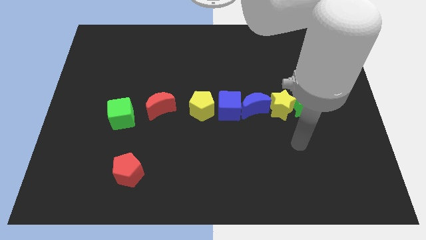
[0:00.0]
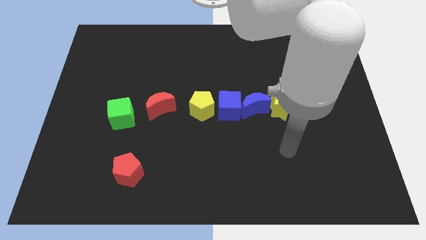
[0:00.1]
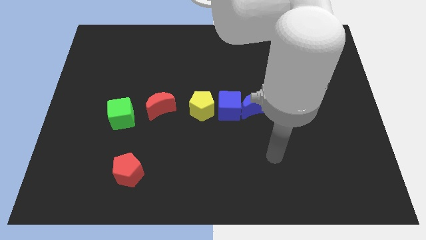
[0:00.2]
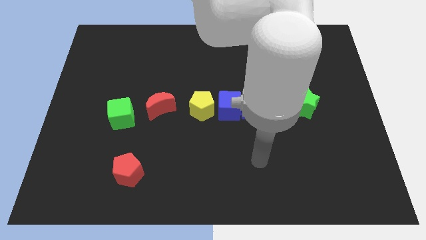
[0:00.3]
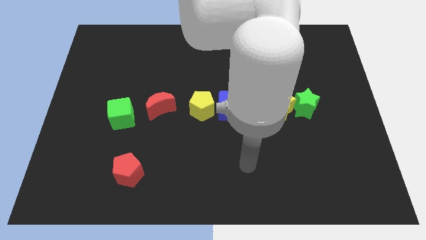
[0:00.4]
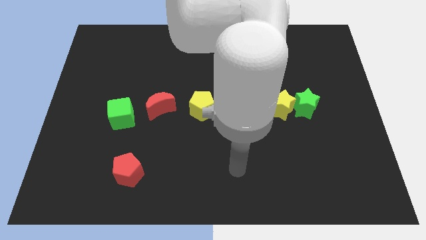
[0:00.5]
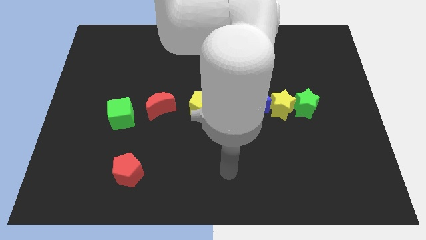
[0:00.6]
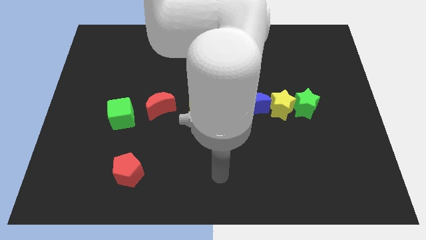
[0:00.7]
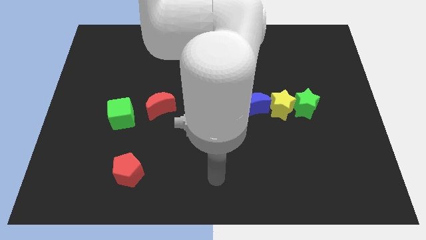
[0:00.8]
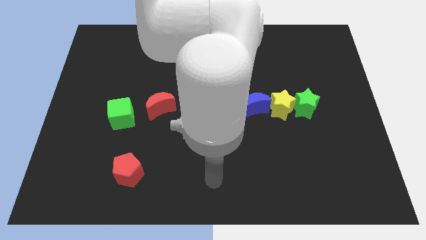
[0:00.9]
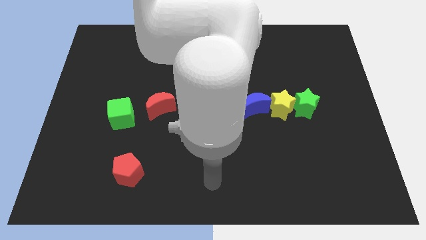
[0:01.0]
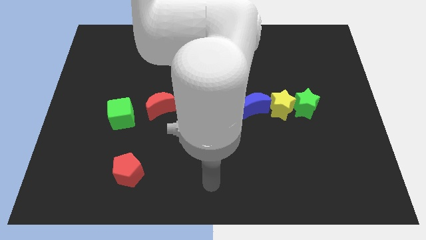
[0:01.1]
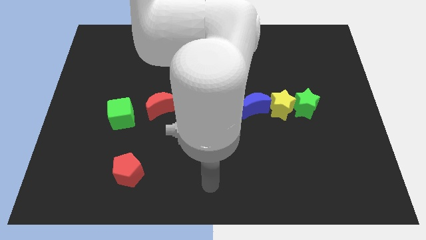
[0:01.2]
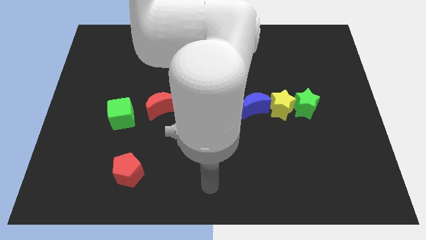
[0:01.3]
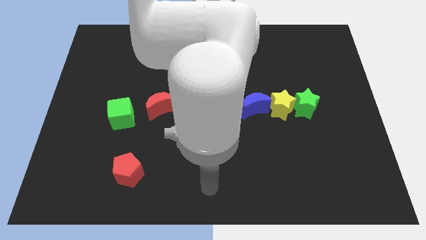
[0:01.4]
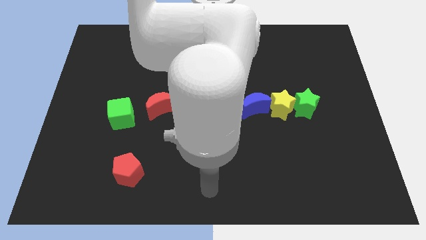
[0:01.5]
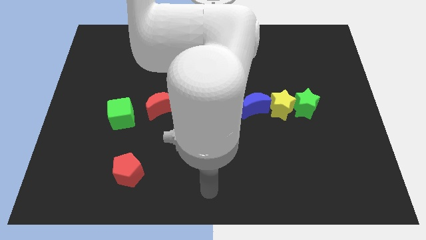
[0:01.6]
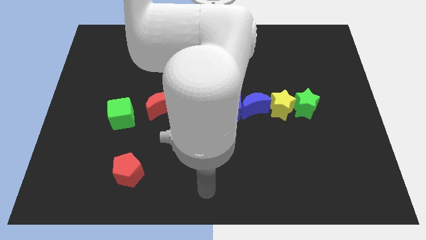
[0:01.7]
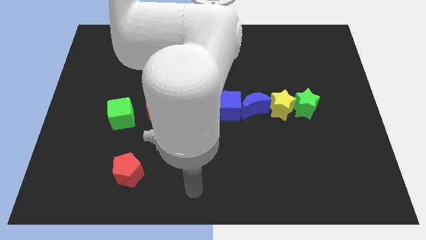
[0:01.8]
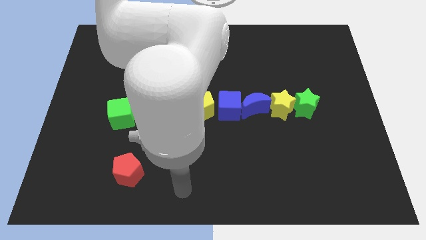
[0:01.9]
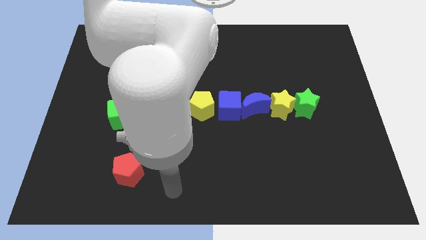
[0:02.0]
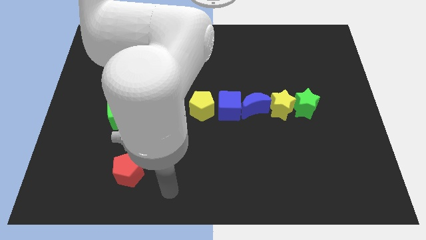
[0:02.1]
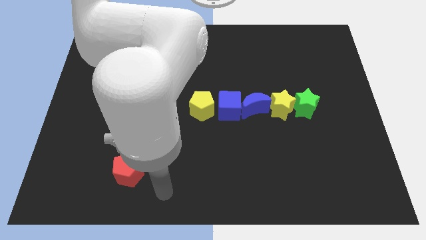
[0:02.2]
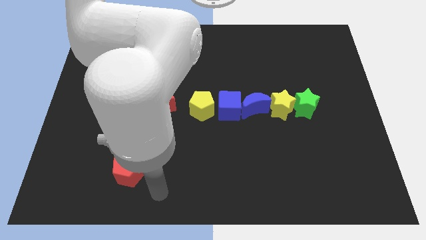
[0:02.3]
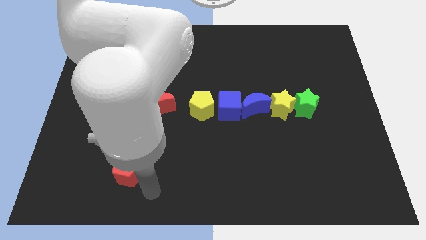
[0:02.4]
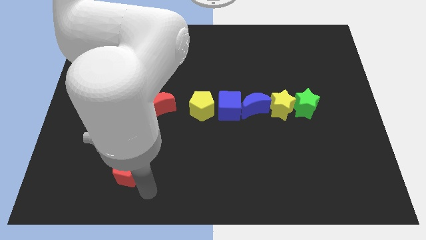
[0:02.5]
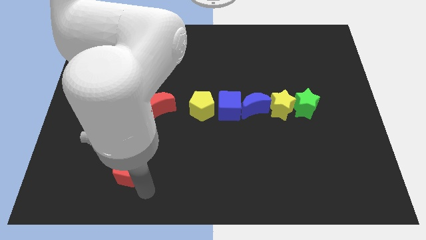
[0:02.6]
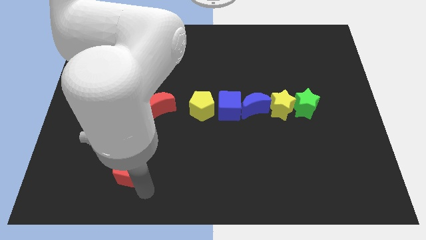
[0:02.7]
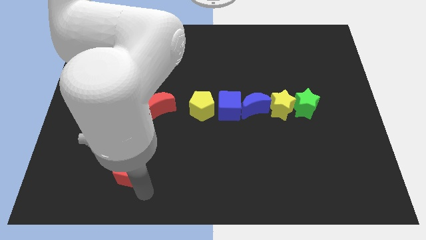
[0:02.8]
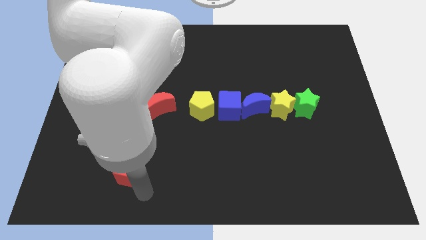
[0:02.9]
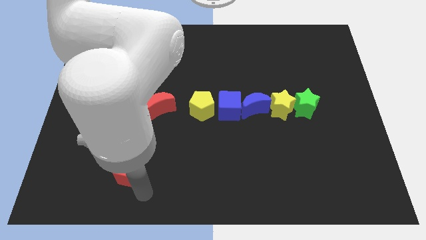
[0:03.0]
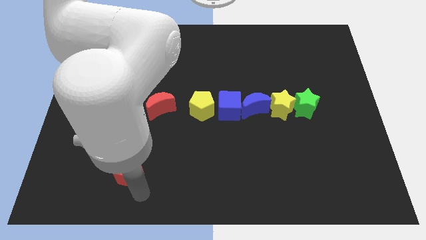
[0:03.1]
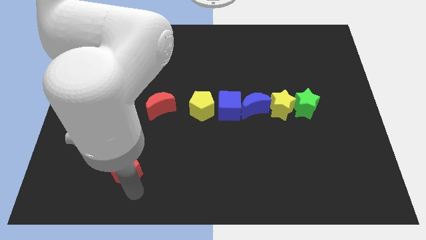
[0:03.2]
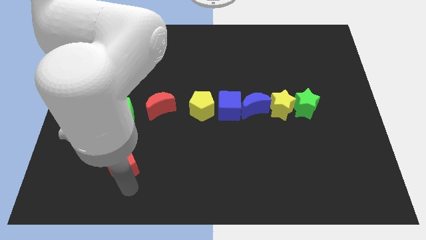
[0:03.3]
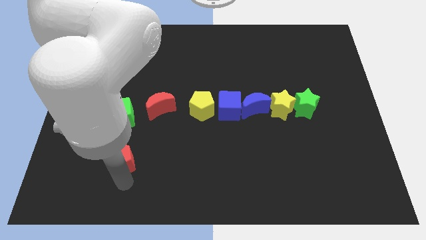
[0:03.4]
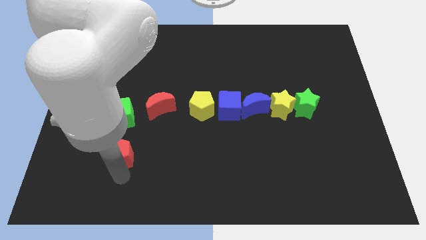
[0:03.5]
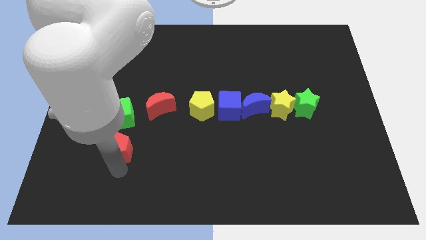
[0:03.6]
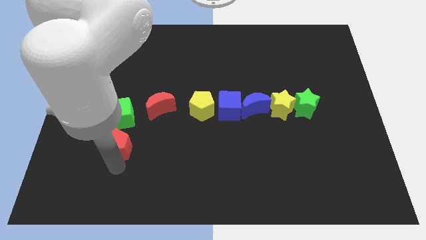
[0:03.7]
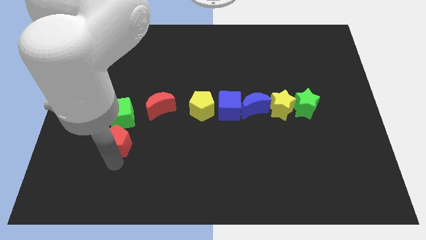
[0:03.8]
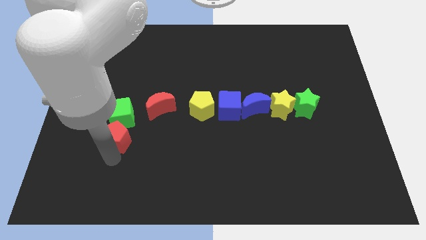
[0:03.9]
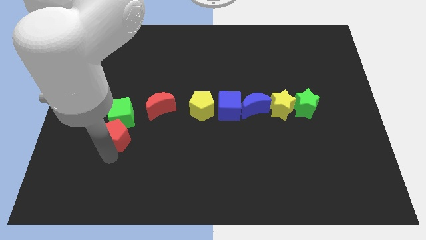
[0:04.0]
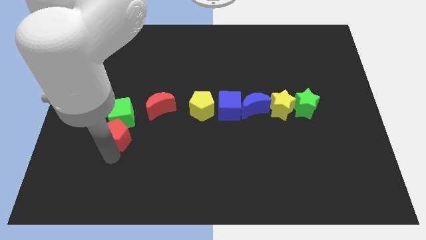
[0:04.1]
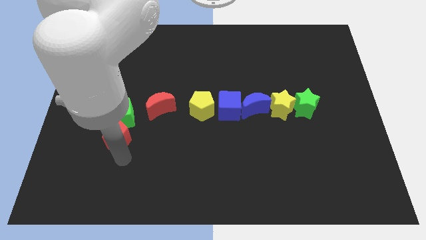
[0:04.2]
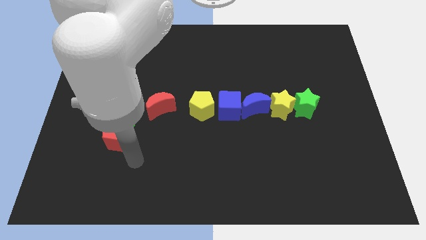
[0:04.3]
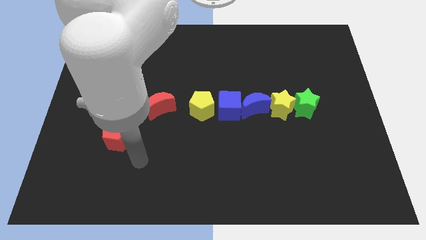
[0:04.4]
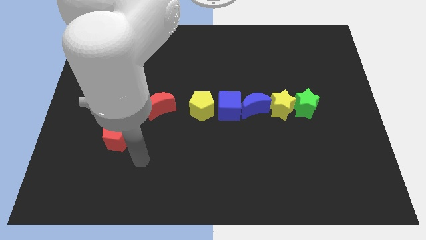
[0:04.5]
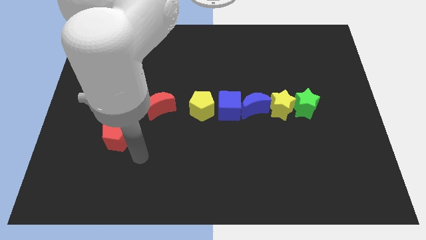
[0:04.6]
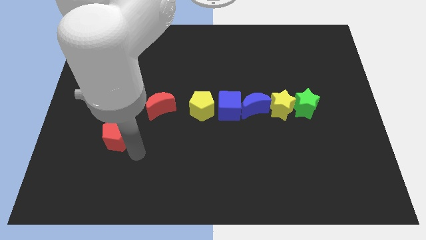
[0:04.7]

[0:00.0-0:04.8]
place the red pentagon below the green cube

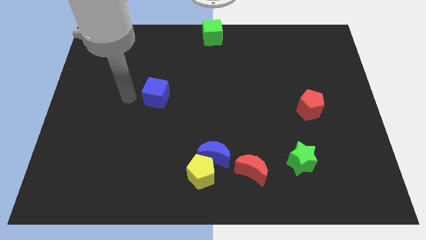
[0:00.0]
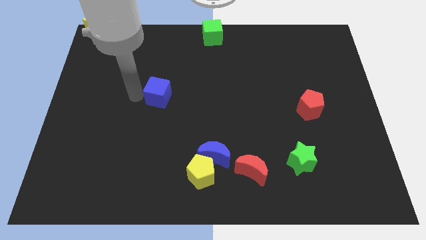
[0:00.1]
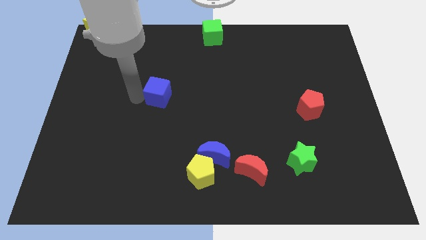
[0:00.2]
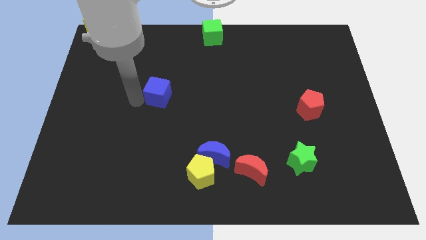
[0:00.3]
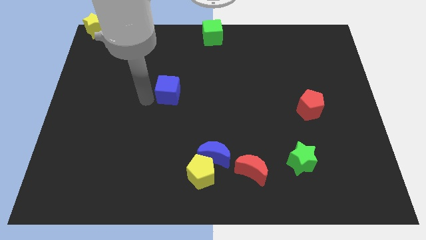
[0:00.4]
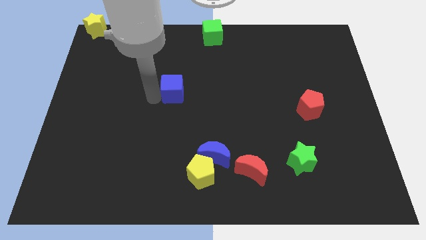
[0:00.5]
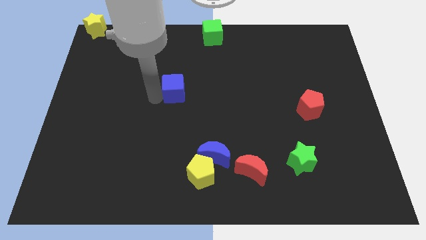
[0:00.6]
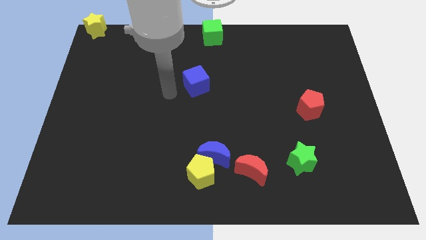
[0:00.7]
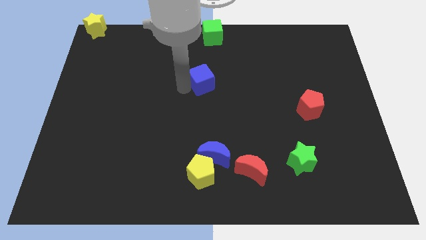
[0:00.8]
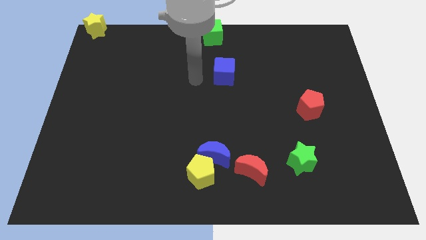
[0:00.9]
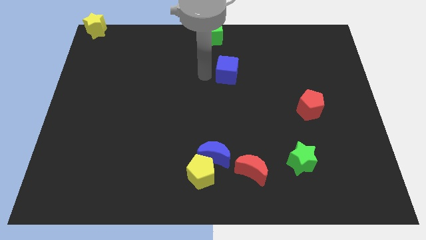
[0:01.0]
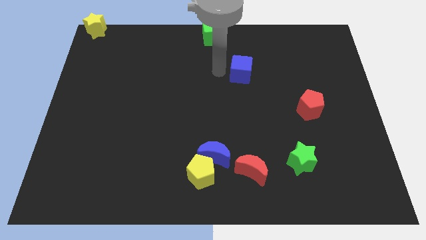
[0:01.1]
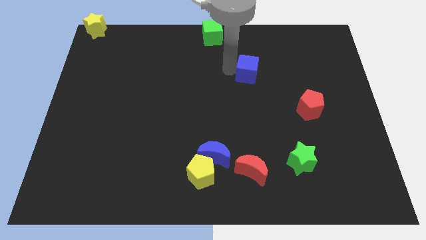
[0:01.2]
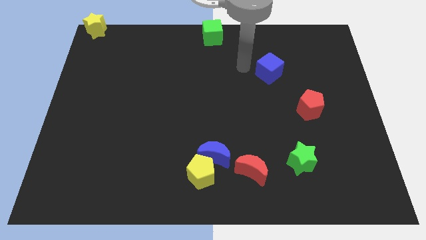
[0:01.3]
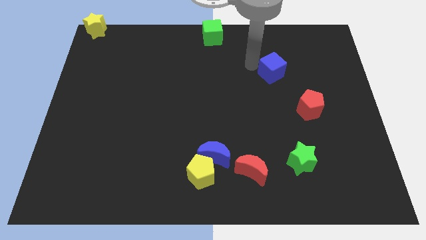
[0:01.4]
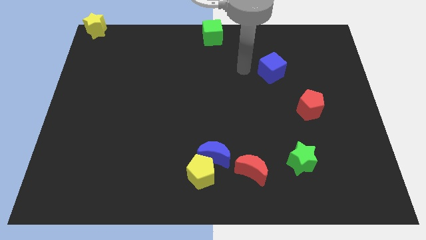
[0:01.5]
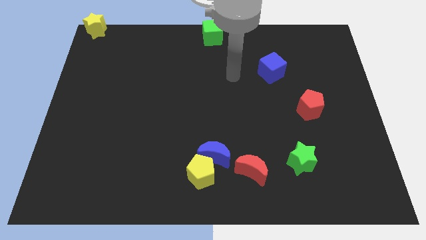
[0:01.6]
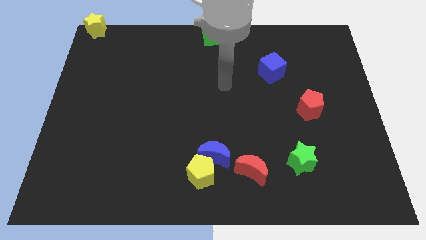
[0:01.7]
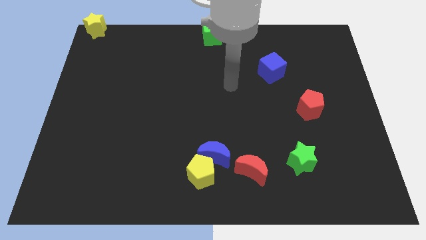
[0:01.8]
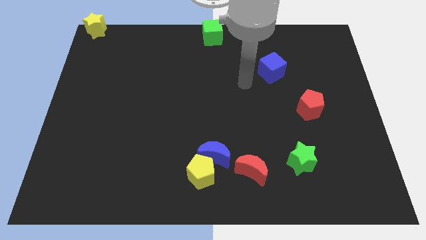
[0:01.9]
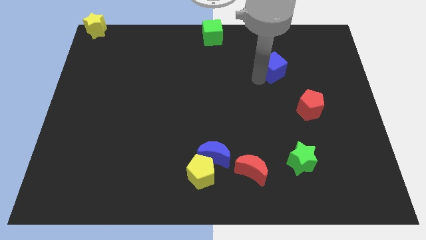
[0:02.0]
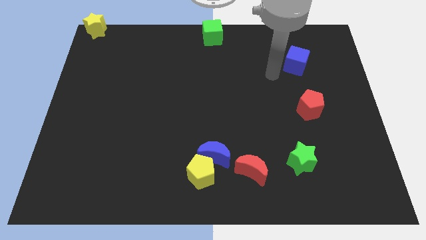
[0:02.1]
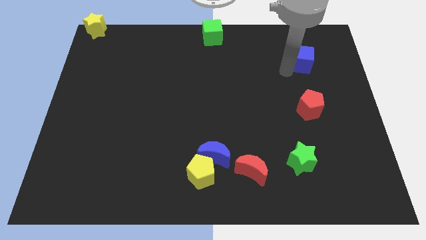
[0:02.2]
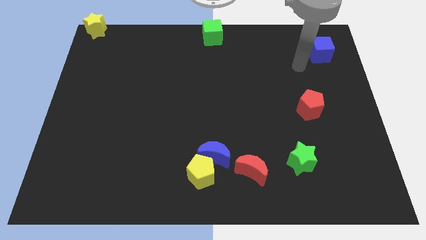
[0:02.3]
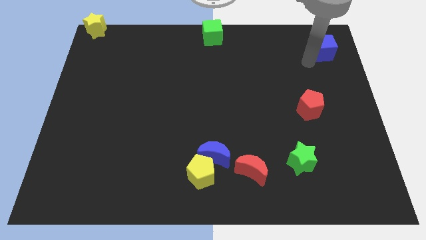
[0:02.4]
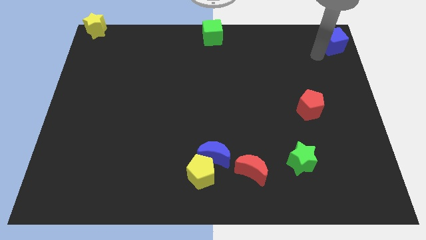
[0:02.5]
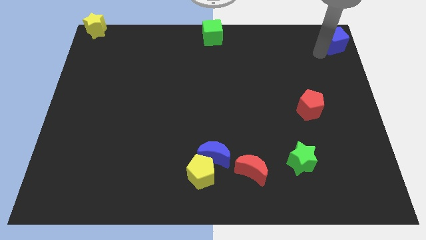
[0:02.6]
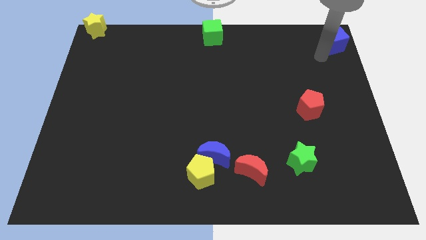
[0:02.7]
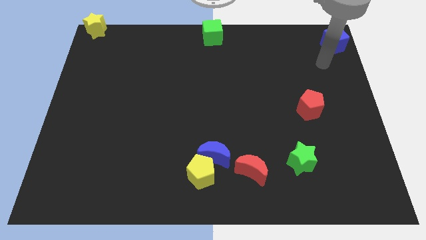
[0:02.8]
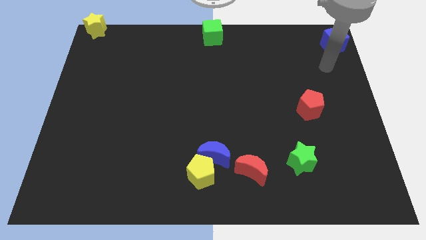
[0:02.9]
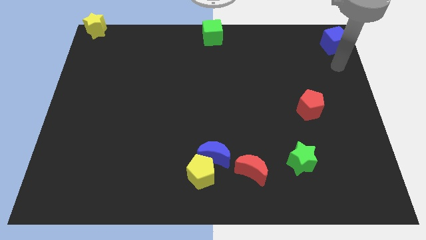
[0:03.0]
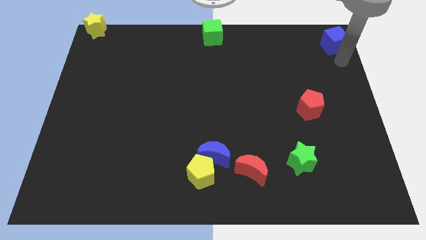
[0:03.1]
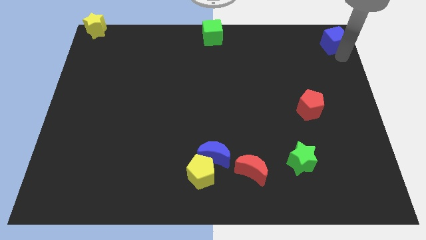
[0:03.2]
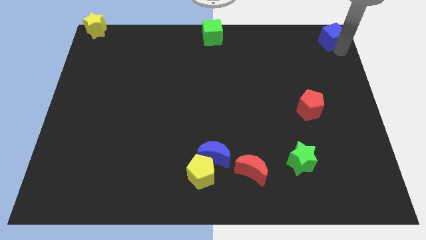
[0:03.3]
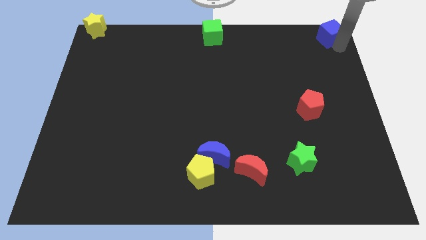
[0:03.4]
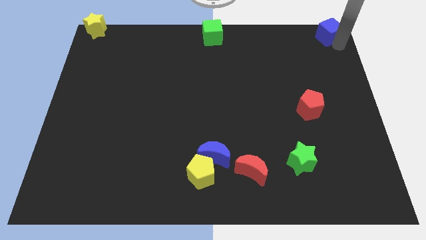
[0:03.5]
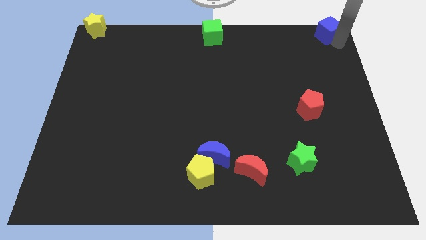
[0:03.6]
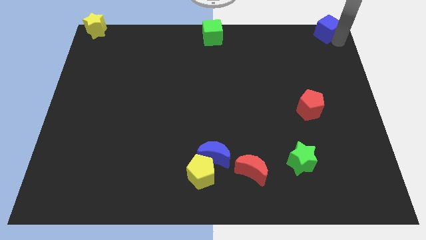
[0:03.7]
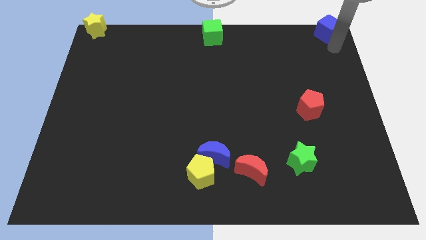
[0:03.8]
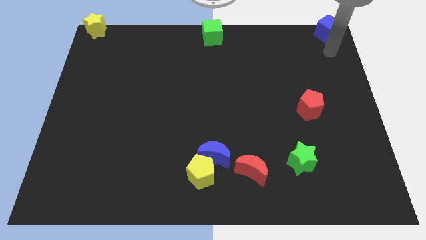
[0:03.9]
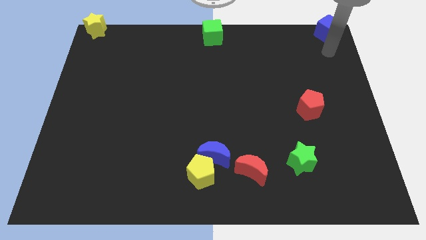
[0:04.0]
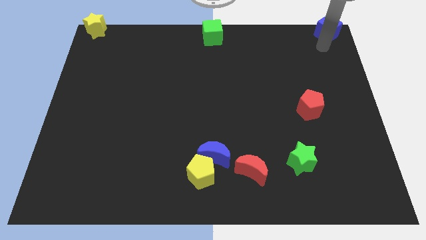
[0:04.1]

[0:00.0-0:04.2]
move blue cube to the top right corner of the board

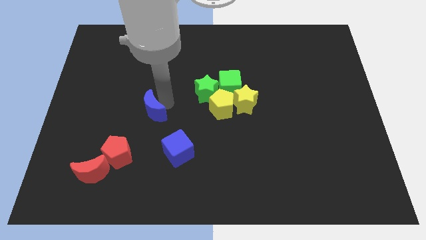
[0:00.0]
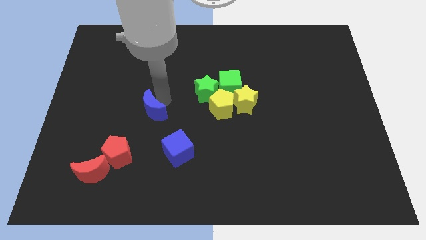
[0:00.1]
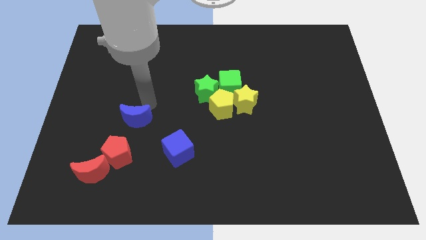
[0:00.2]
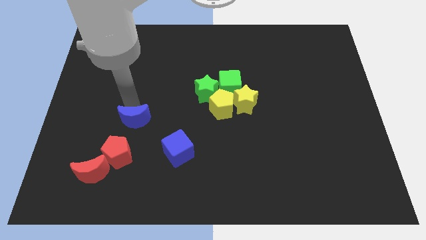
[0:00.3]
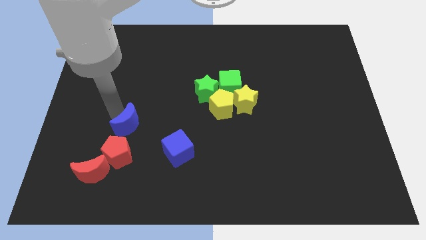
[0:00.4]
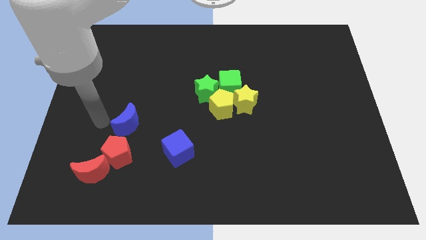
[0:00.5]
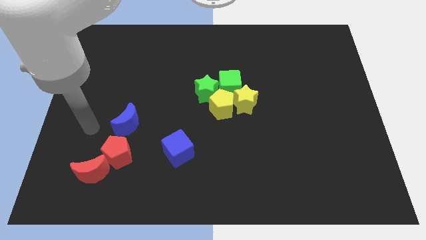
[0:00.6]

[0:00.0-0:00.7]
place the blue crescent to the top right of the red pentagon
